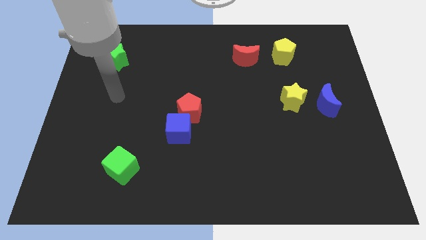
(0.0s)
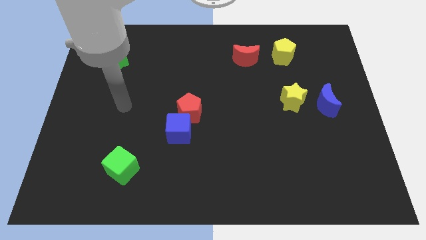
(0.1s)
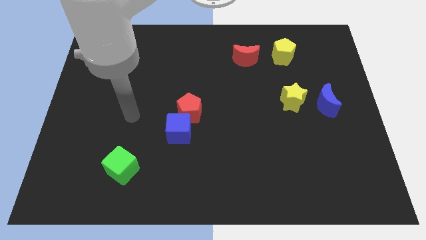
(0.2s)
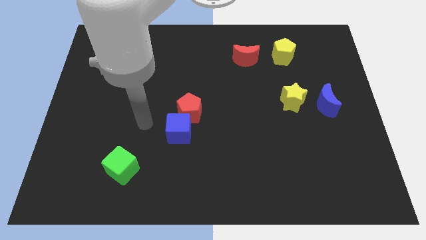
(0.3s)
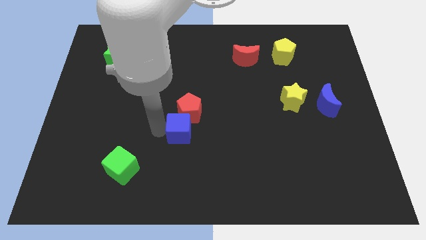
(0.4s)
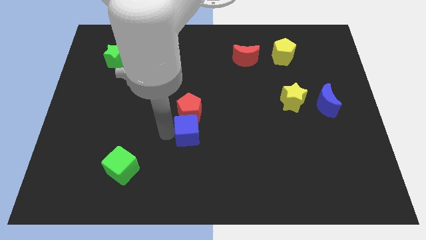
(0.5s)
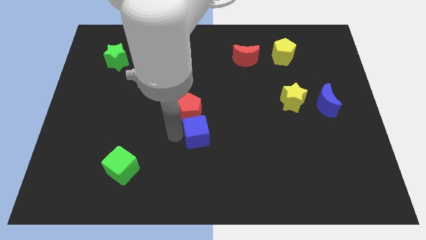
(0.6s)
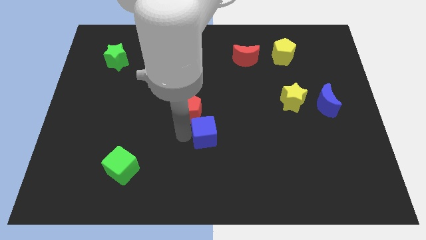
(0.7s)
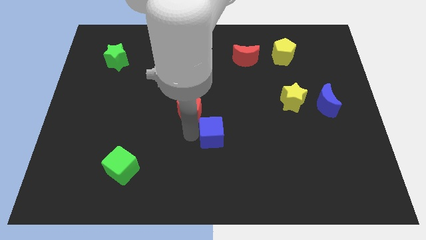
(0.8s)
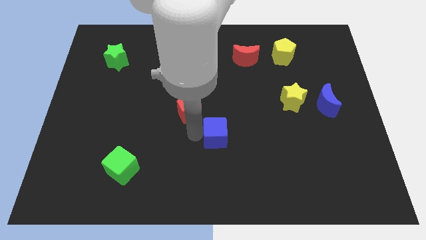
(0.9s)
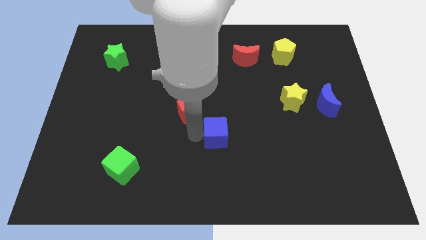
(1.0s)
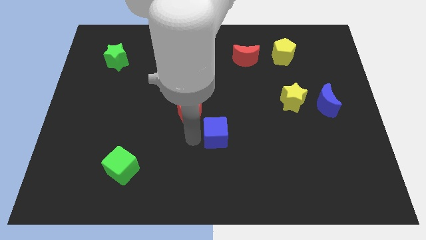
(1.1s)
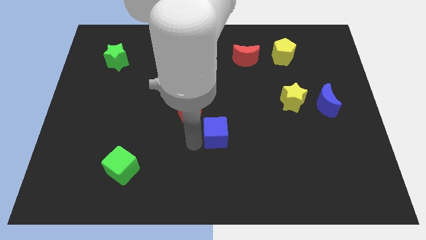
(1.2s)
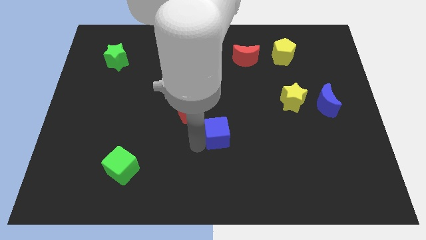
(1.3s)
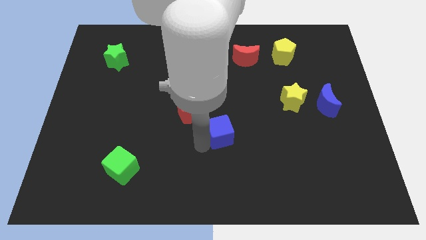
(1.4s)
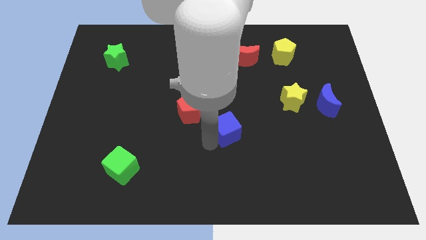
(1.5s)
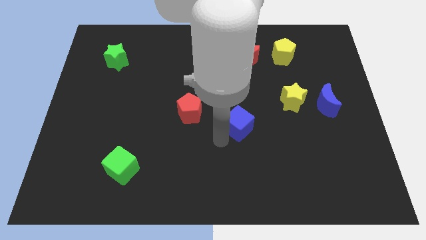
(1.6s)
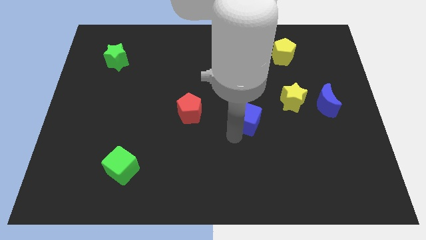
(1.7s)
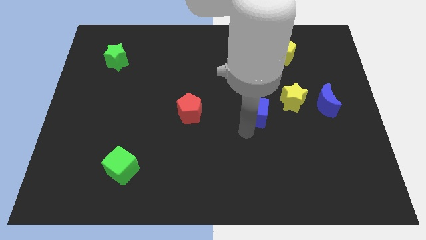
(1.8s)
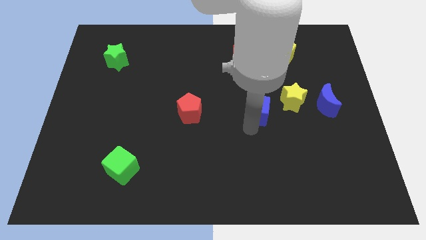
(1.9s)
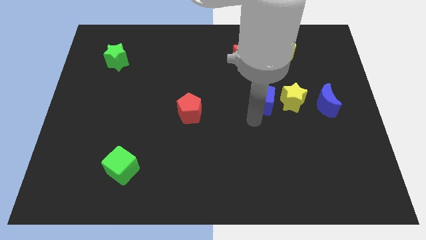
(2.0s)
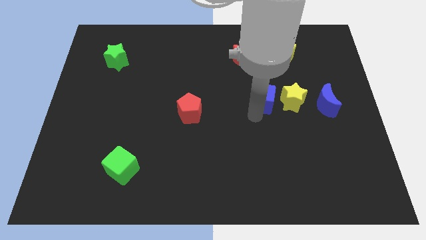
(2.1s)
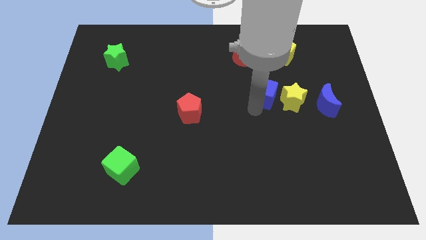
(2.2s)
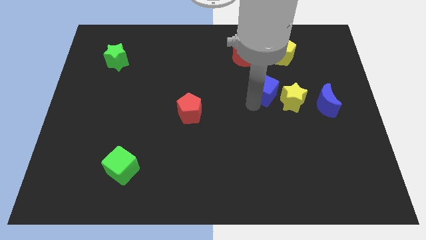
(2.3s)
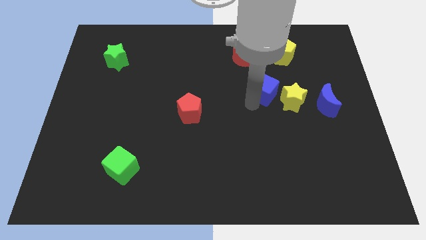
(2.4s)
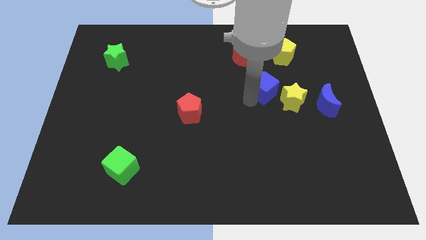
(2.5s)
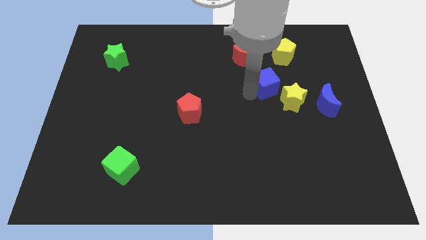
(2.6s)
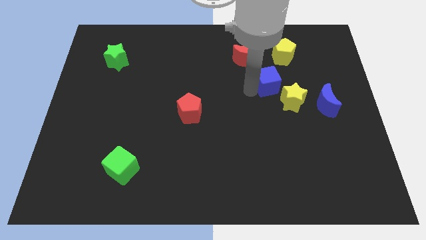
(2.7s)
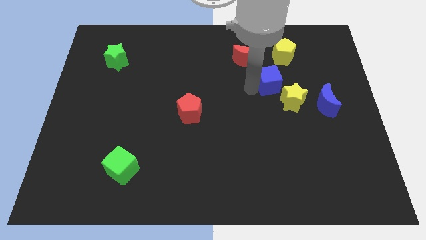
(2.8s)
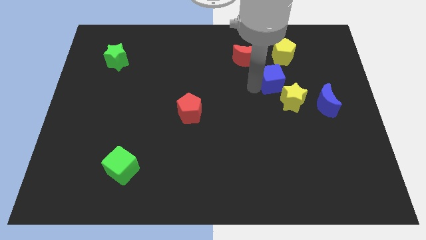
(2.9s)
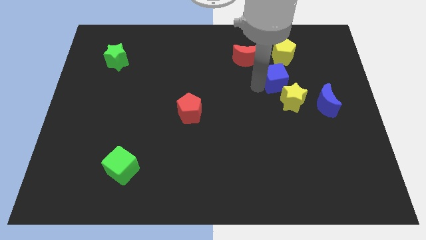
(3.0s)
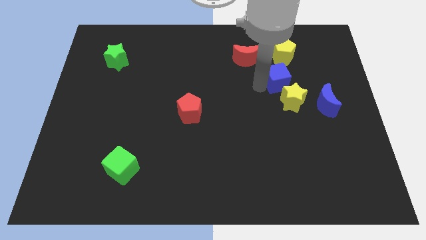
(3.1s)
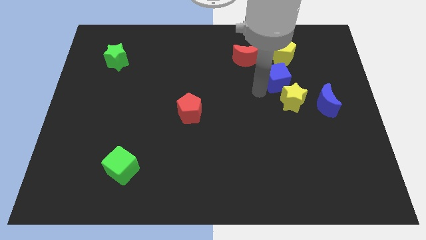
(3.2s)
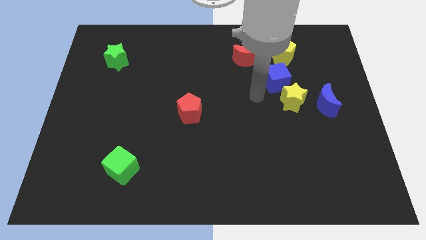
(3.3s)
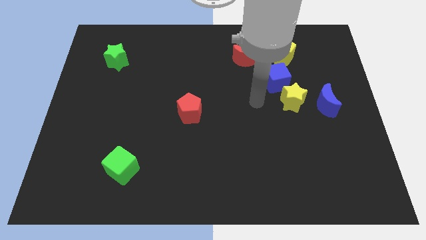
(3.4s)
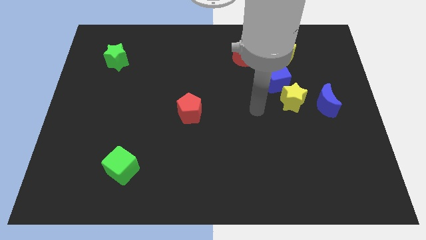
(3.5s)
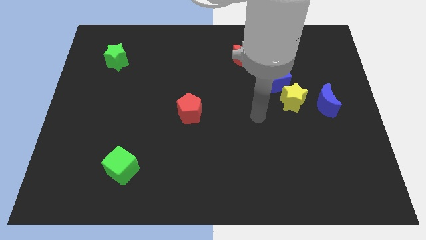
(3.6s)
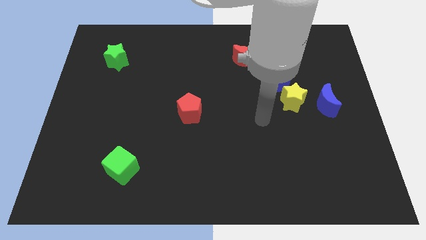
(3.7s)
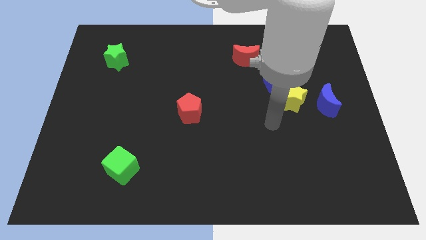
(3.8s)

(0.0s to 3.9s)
place the blue cube in between the yellow star and yellow pentagon

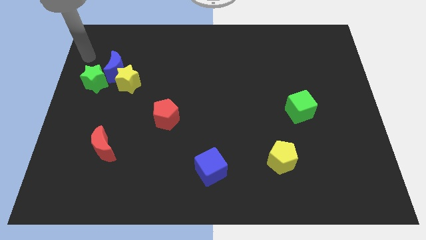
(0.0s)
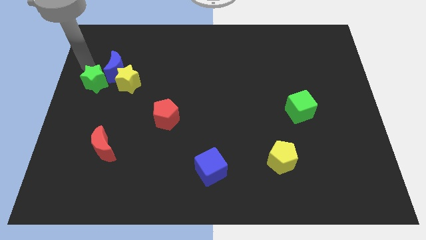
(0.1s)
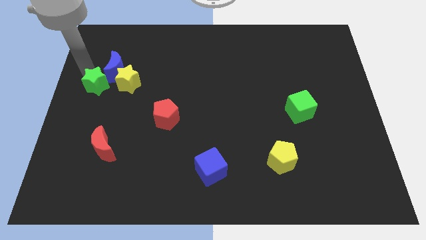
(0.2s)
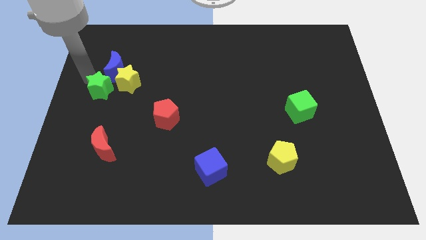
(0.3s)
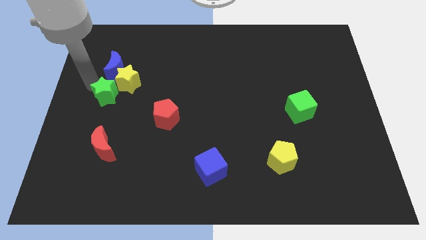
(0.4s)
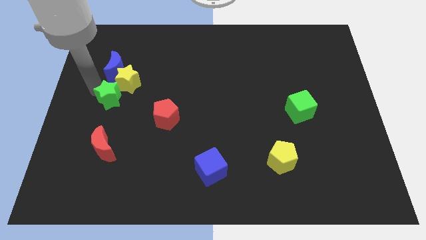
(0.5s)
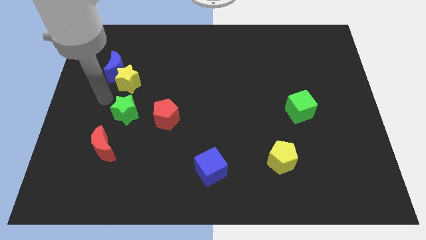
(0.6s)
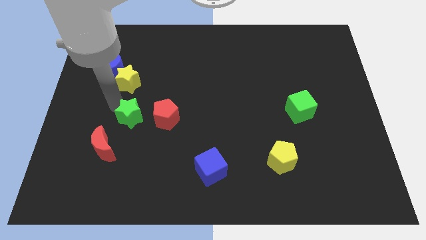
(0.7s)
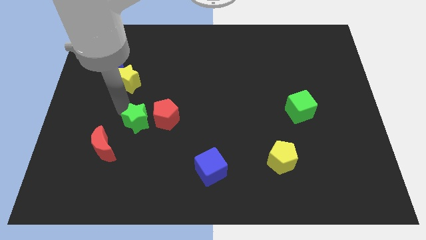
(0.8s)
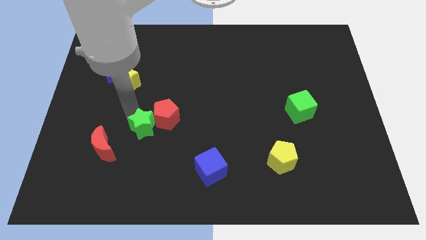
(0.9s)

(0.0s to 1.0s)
push the green star to the left of the red pentagon

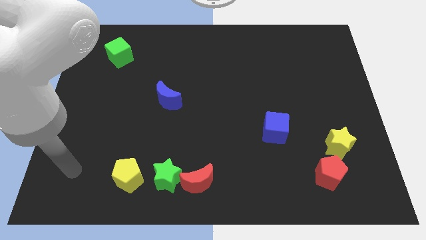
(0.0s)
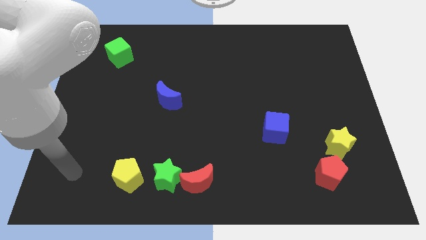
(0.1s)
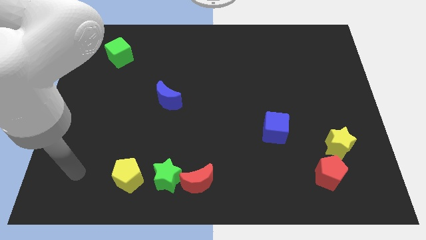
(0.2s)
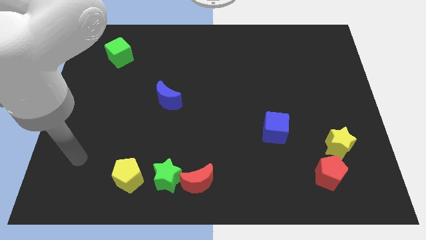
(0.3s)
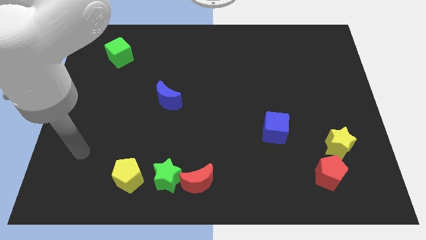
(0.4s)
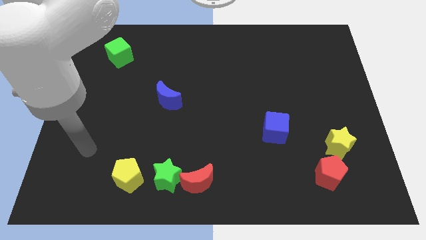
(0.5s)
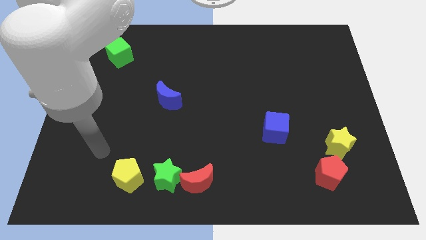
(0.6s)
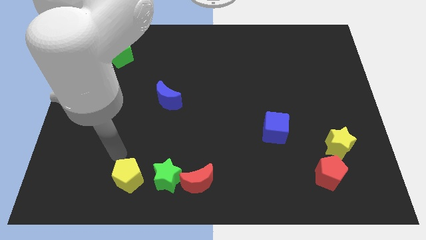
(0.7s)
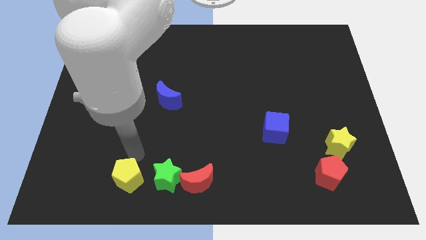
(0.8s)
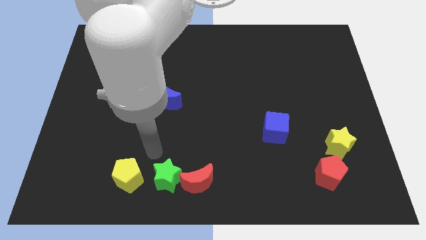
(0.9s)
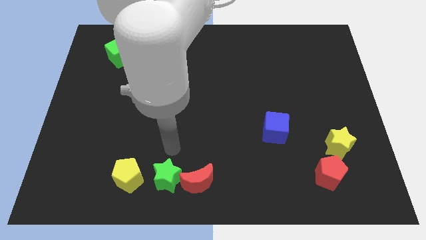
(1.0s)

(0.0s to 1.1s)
point your hand above the green star

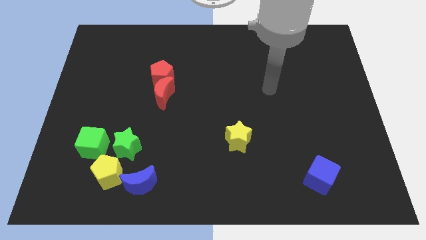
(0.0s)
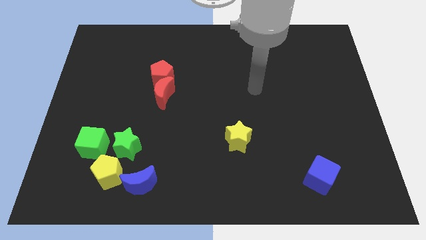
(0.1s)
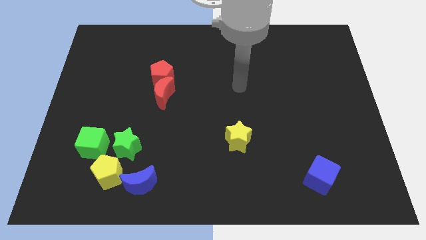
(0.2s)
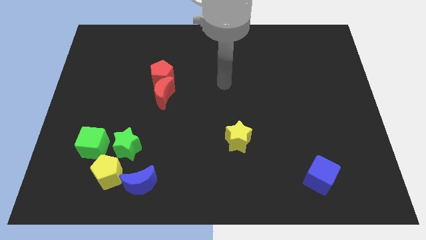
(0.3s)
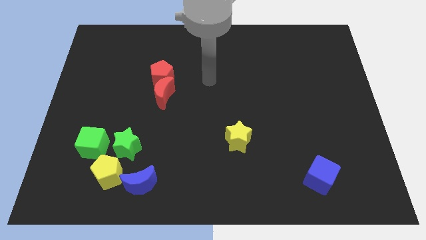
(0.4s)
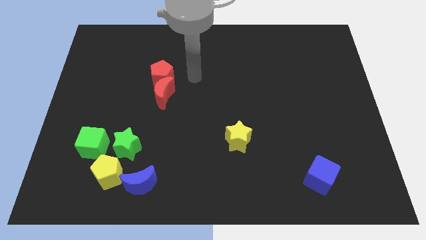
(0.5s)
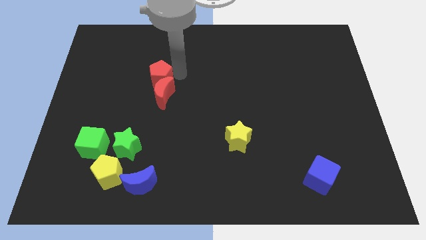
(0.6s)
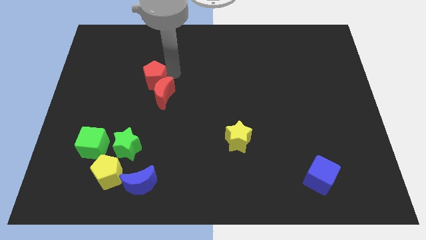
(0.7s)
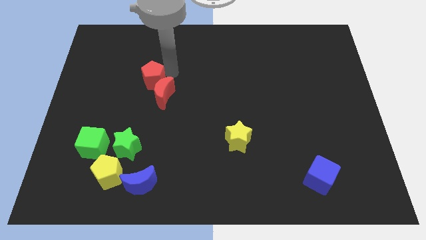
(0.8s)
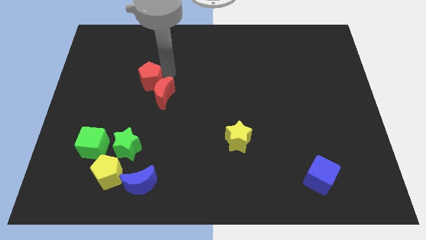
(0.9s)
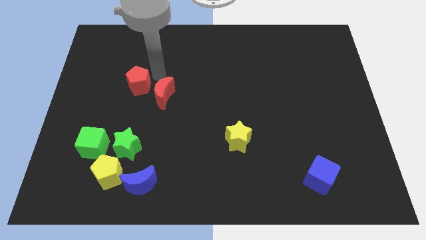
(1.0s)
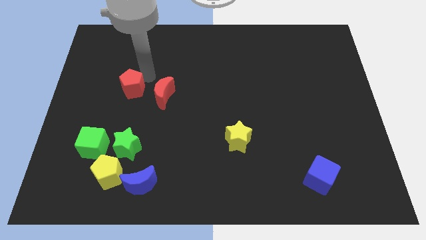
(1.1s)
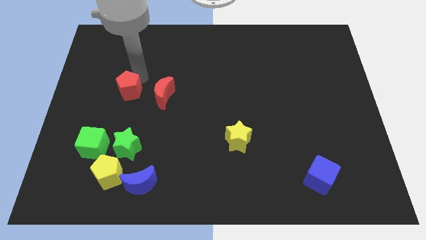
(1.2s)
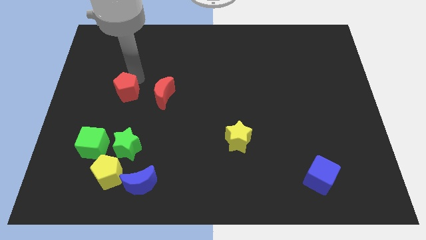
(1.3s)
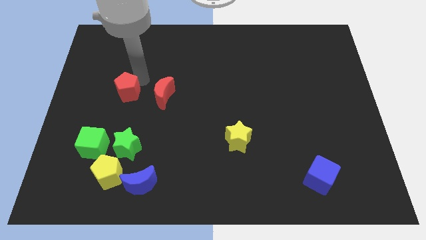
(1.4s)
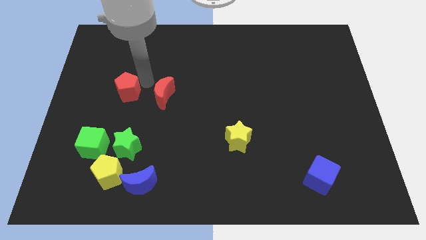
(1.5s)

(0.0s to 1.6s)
push the red pentagon to the left of the red crescent

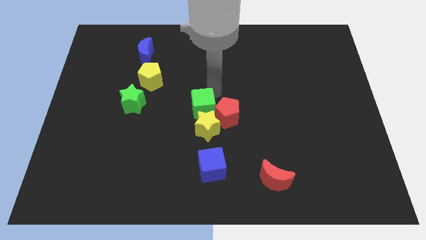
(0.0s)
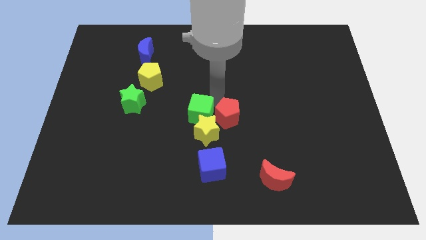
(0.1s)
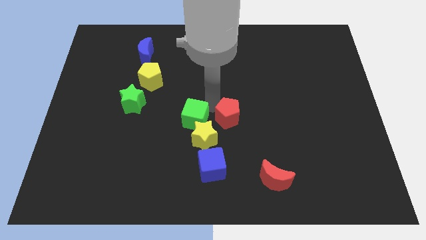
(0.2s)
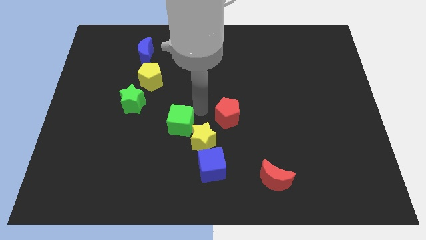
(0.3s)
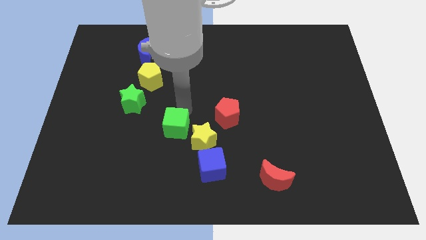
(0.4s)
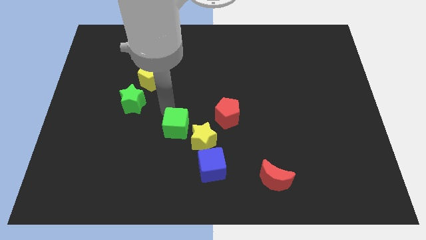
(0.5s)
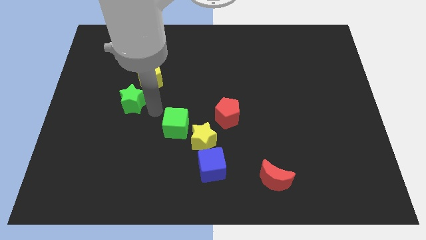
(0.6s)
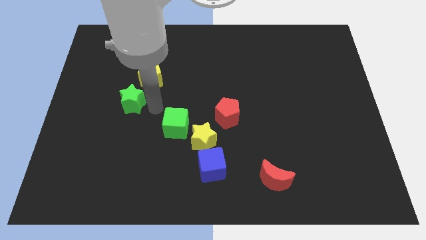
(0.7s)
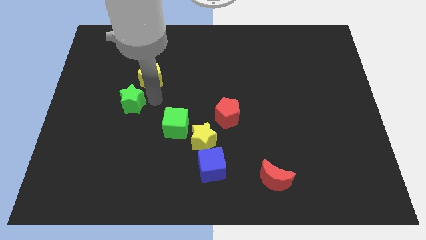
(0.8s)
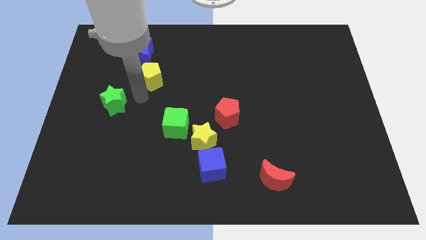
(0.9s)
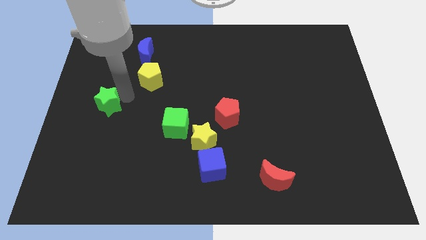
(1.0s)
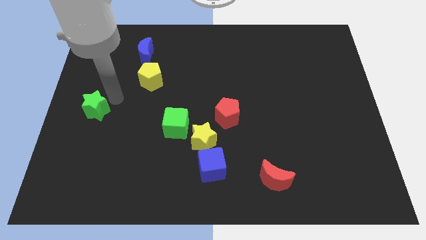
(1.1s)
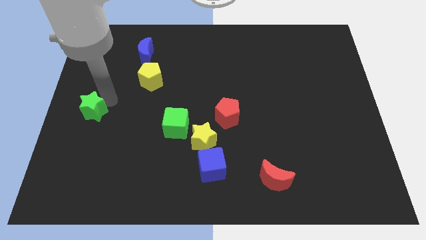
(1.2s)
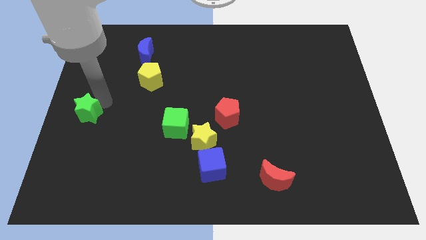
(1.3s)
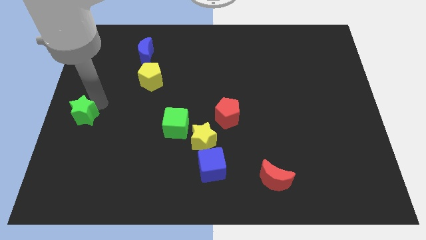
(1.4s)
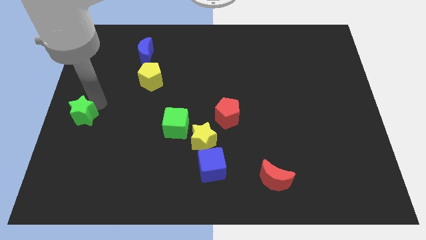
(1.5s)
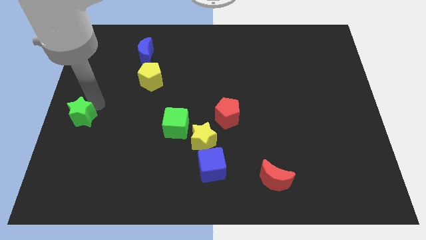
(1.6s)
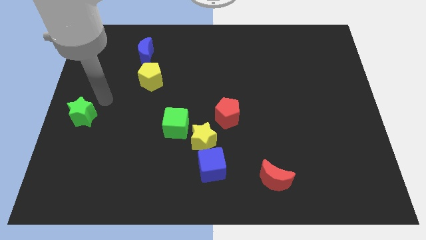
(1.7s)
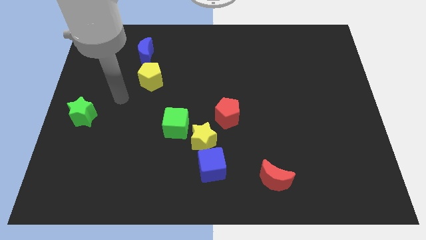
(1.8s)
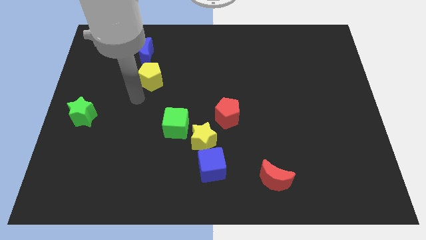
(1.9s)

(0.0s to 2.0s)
push the green star to the center left of the board
